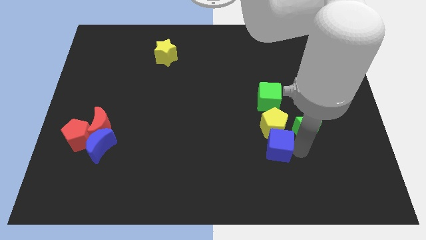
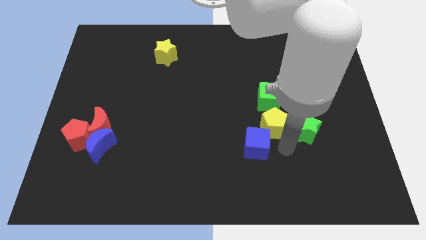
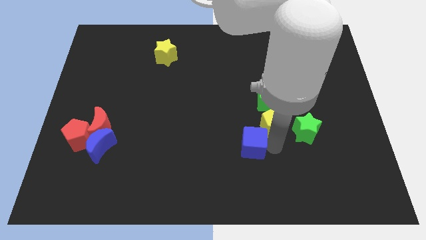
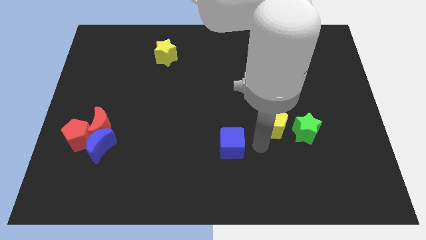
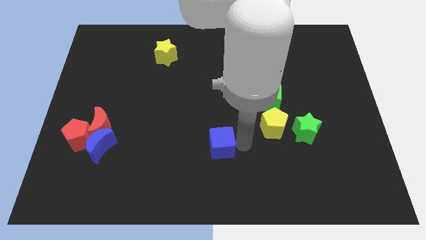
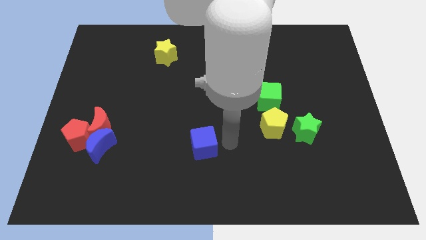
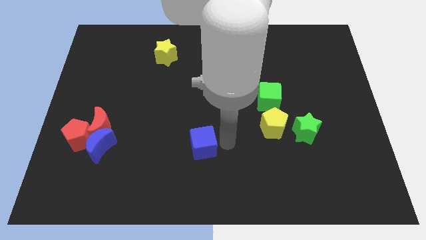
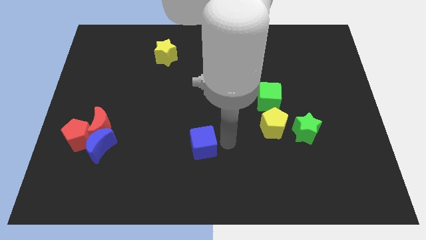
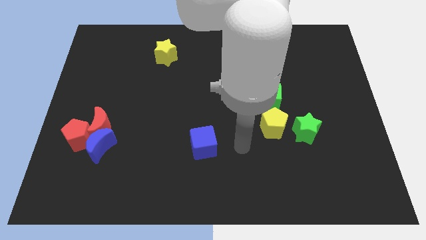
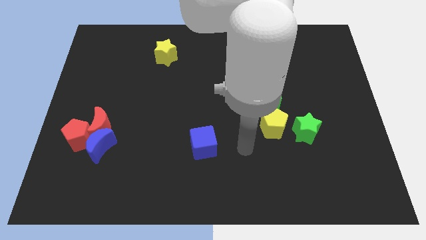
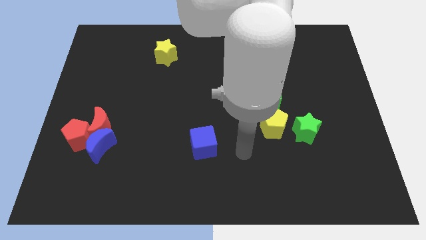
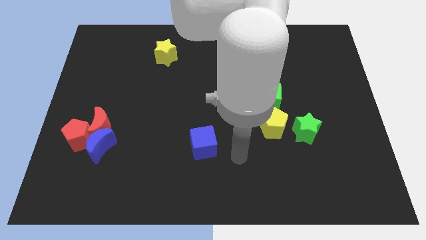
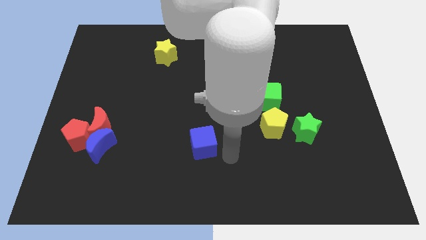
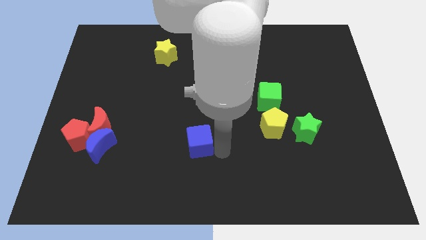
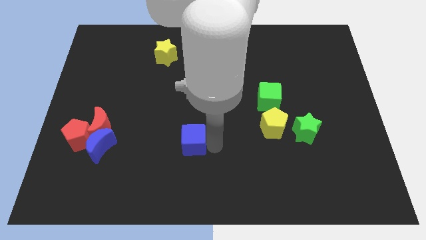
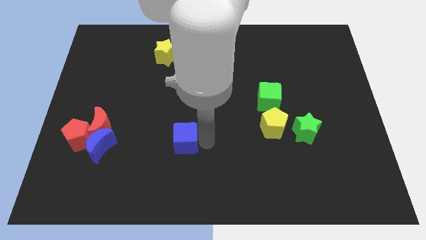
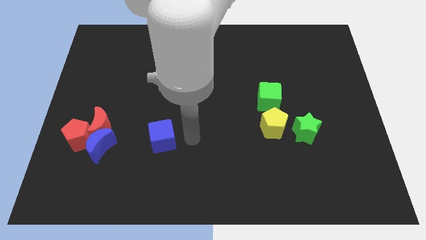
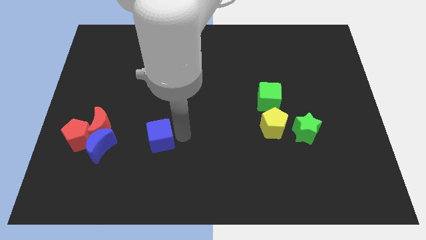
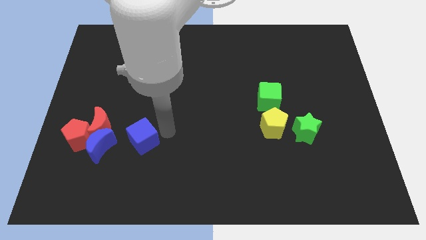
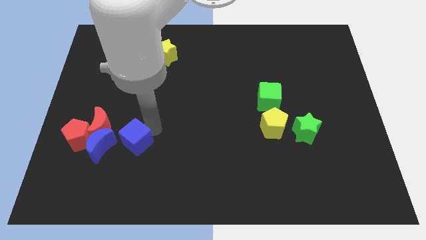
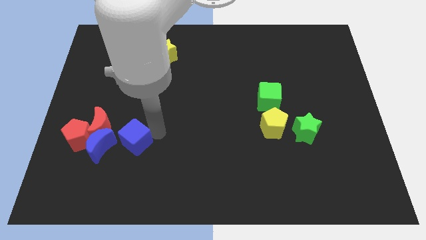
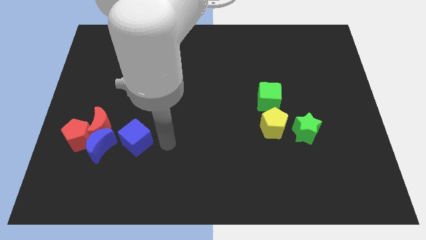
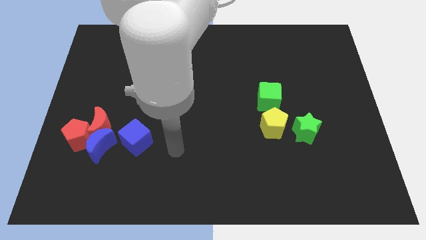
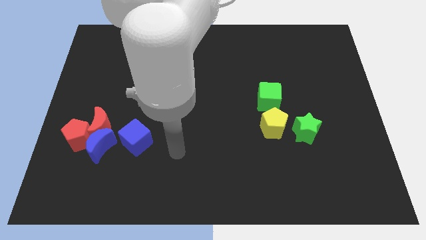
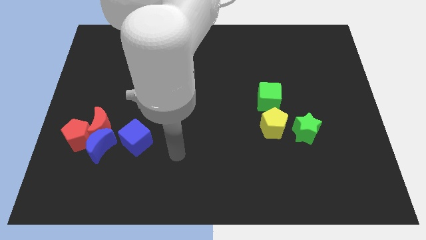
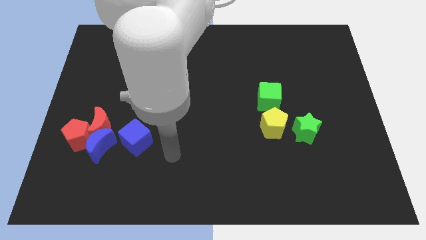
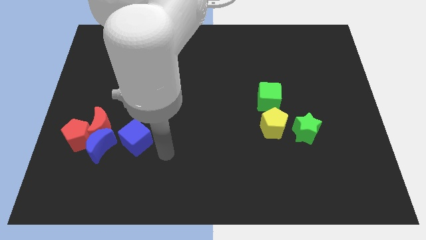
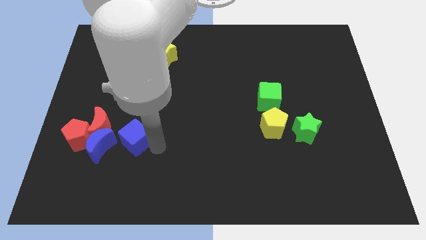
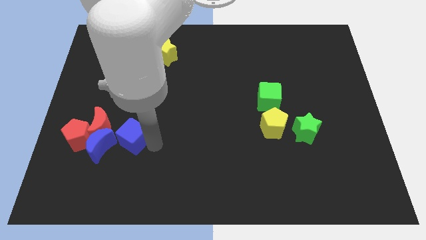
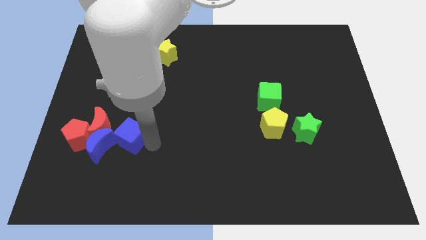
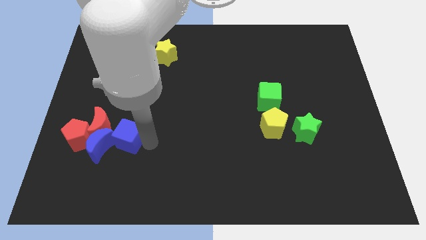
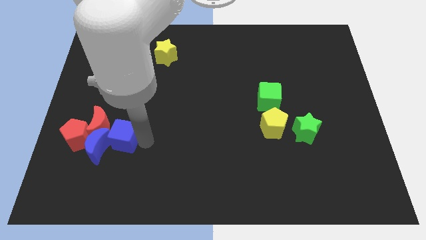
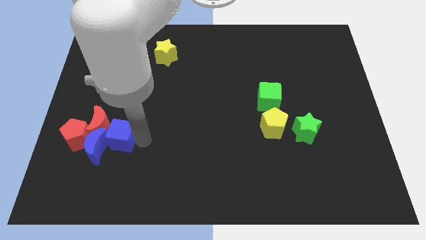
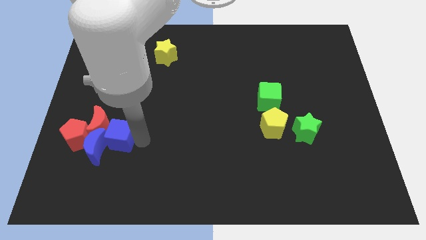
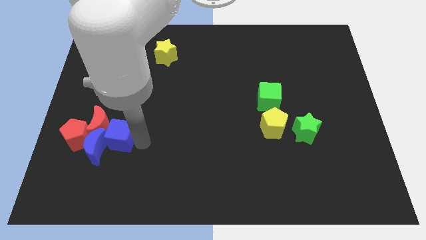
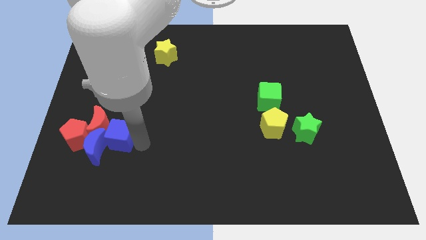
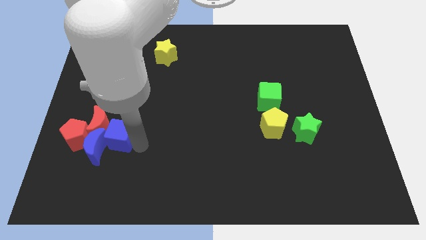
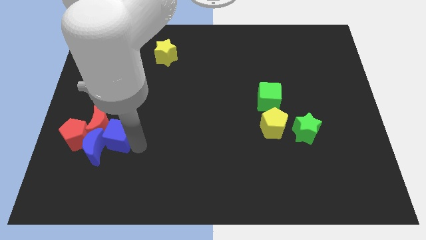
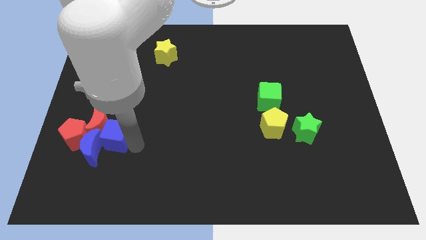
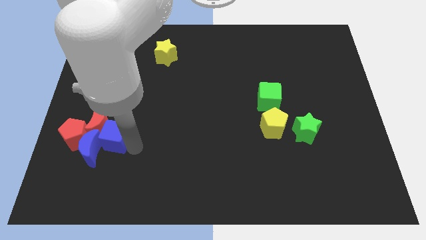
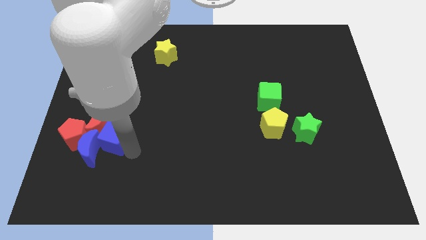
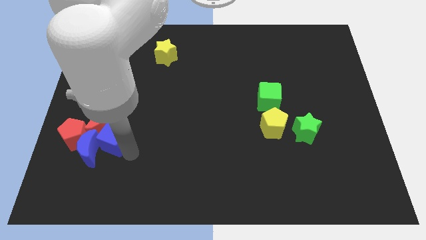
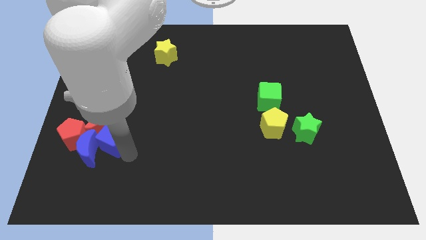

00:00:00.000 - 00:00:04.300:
push the blue cube into the blue and the red moon

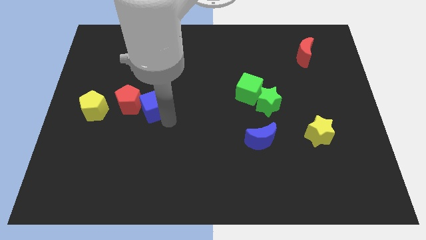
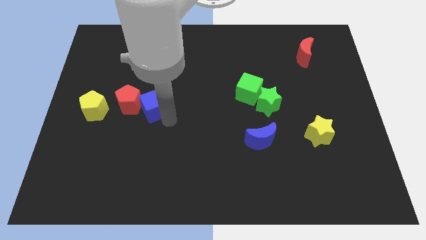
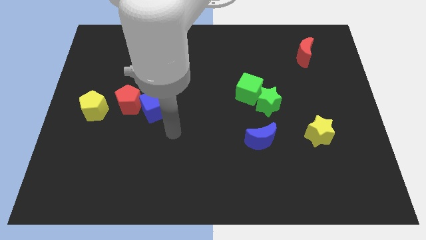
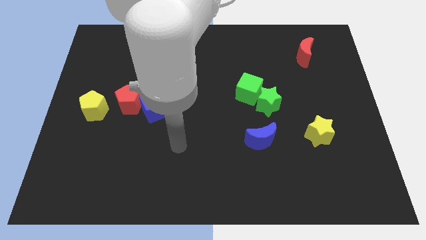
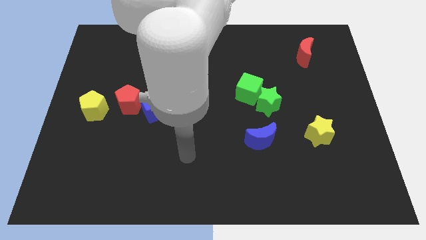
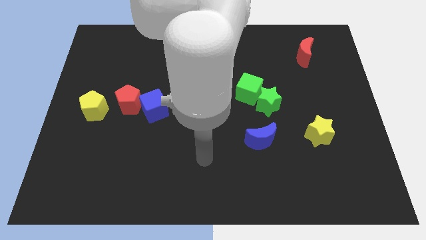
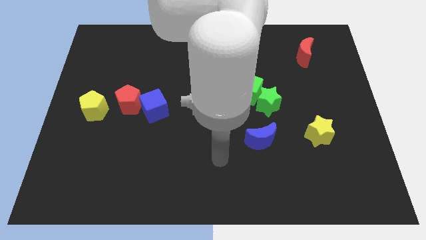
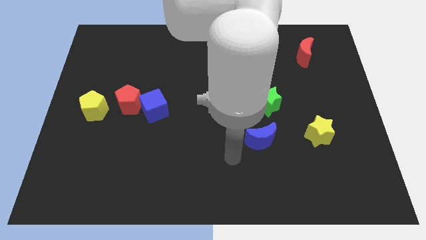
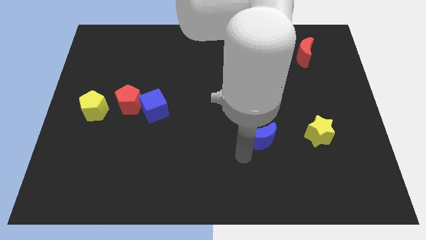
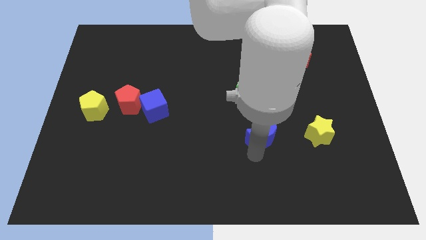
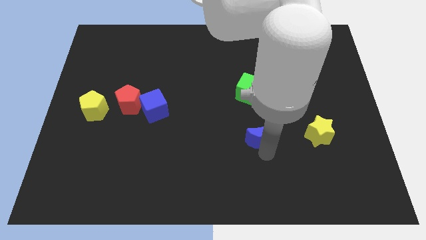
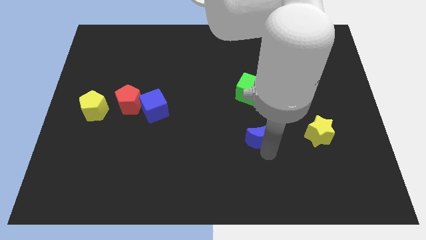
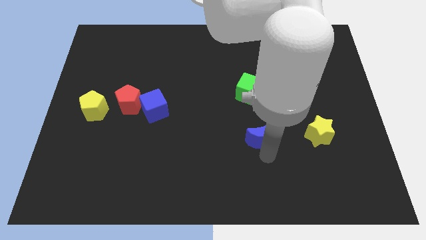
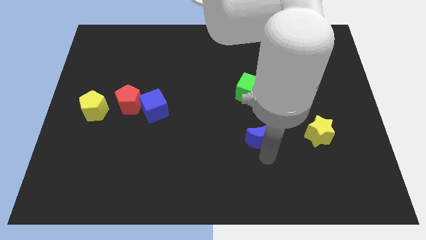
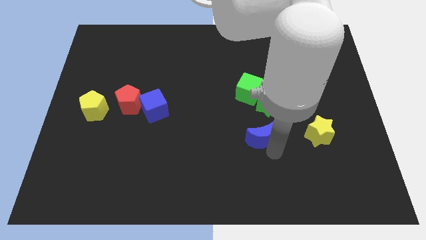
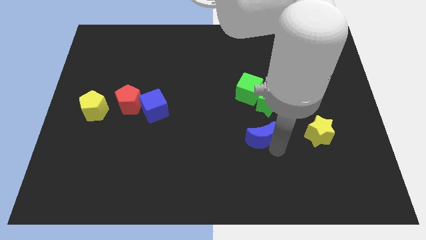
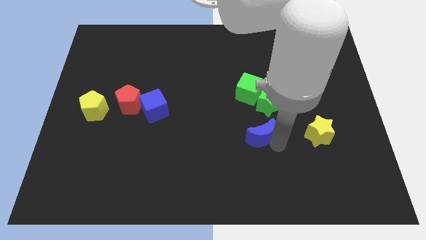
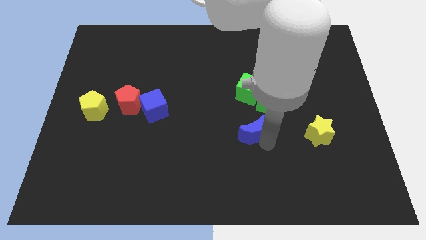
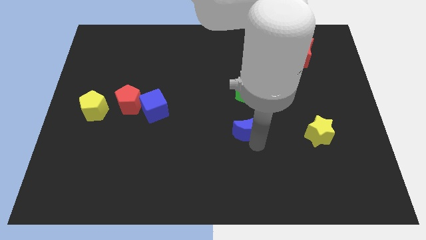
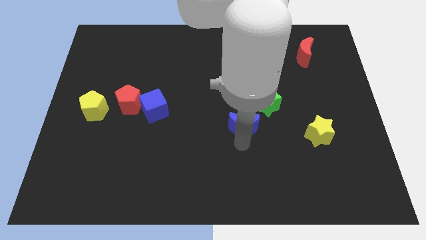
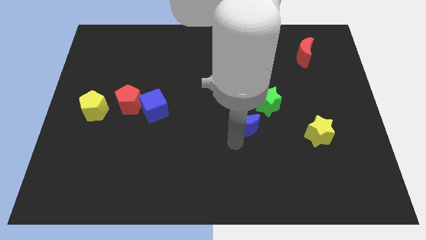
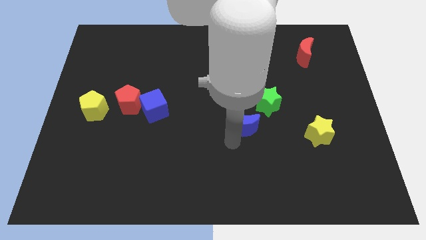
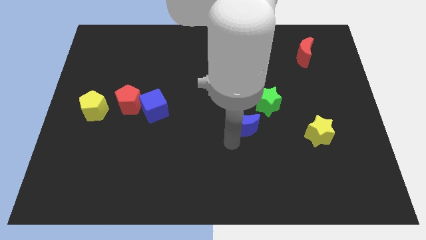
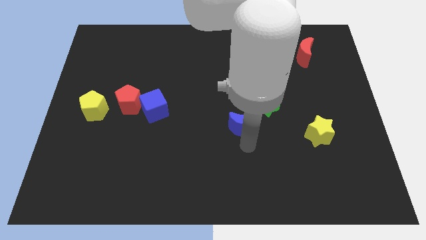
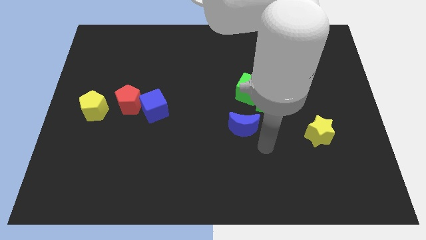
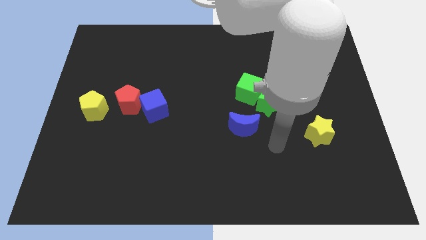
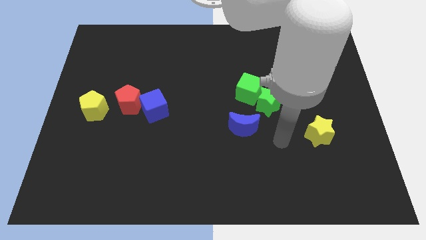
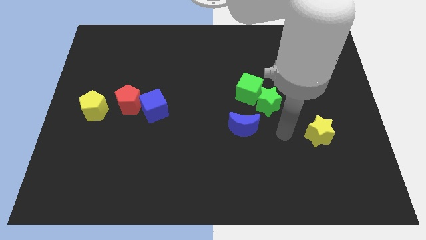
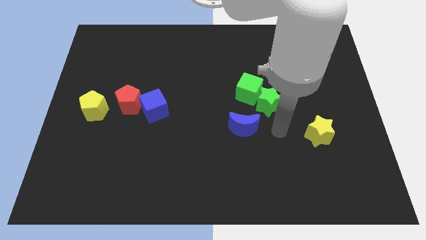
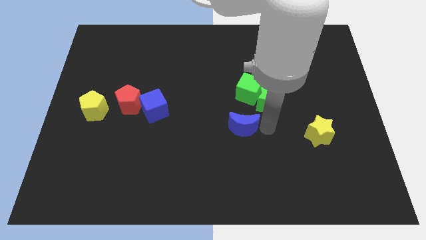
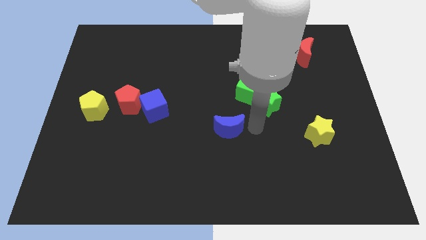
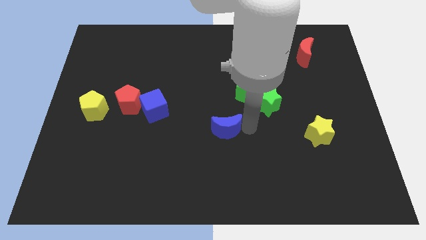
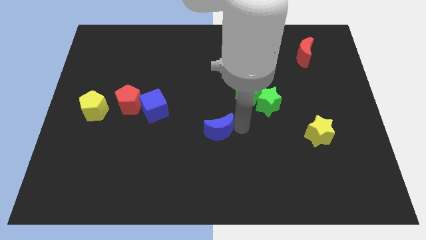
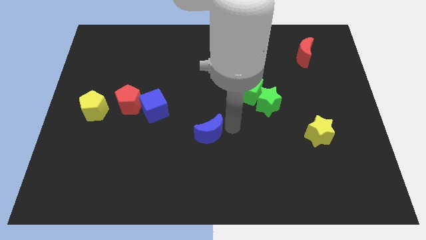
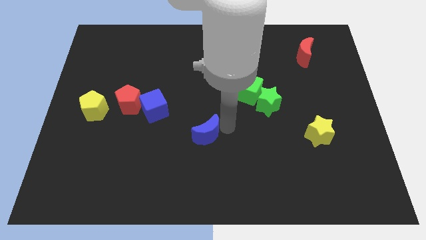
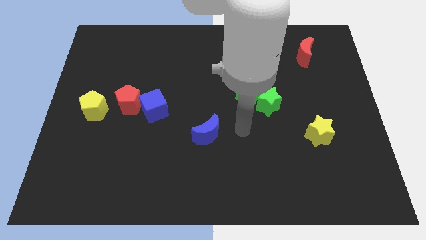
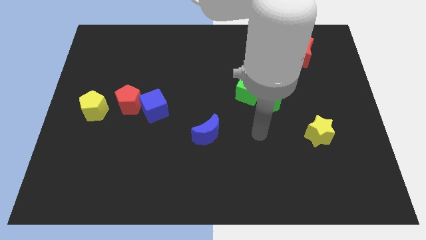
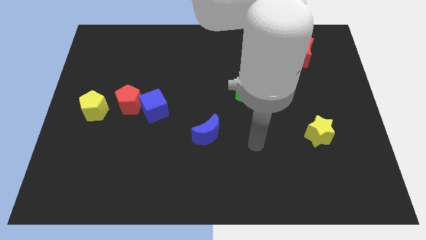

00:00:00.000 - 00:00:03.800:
move the blue crescent to the bottom right of the blue cube

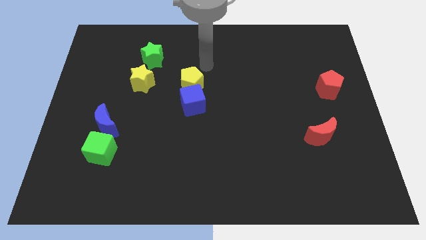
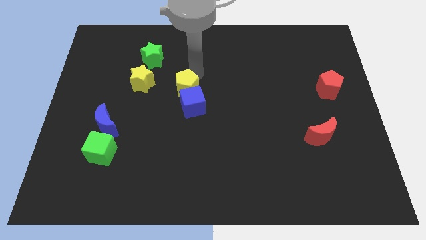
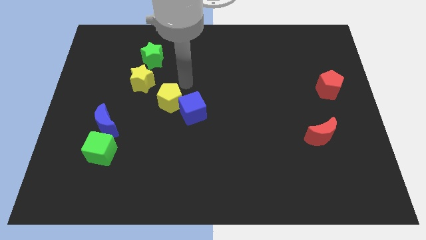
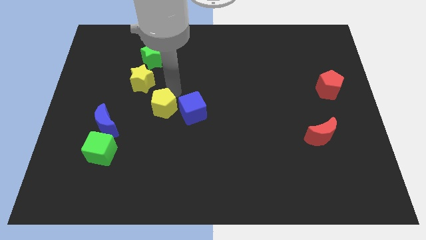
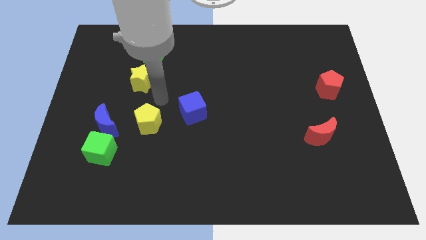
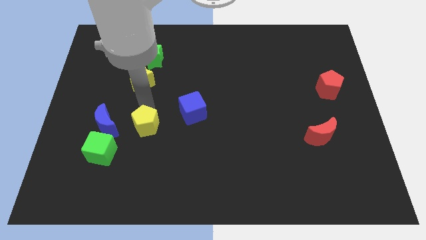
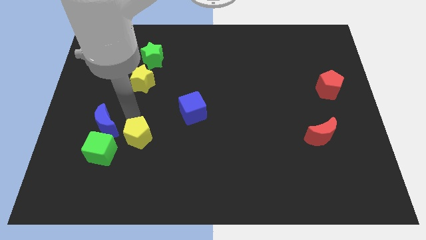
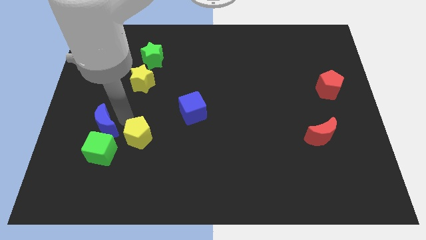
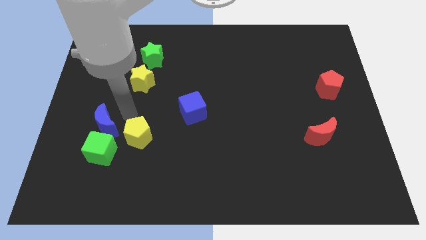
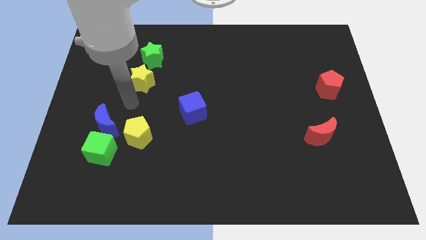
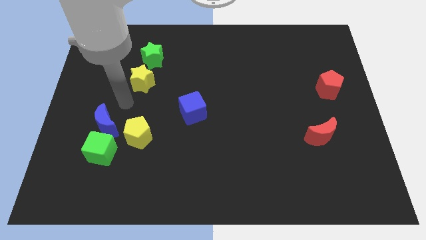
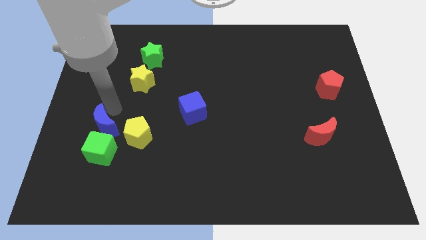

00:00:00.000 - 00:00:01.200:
separate yellow pentagon from the blue cube
